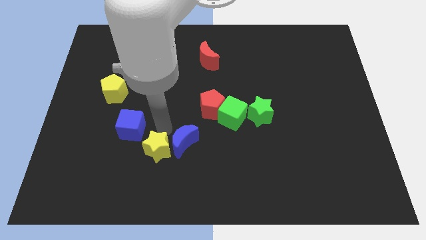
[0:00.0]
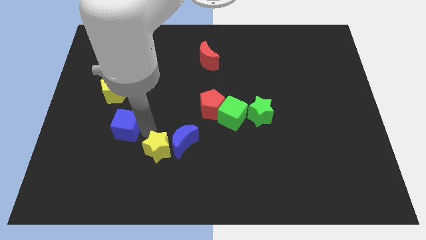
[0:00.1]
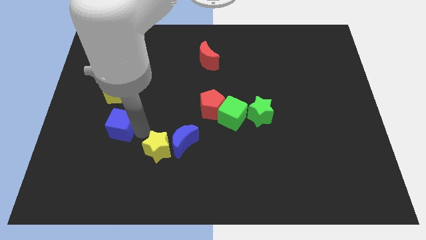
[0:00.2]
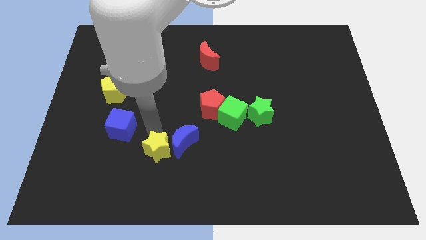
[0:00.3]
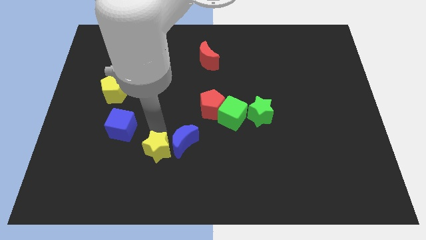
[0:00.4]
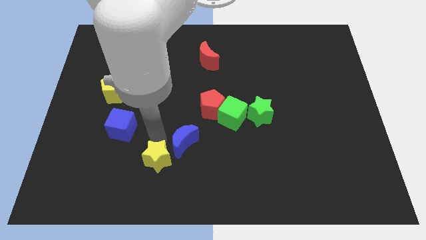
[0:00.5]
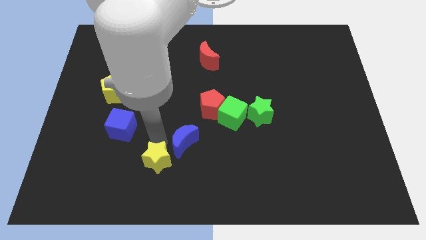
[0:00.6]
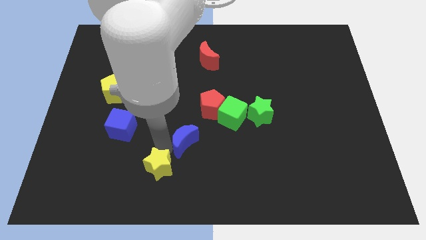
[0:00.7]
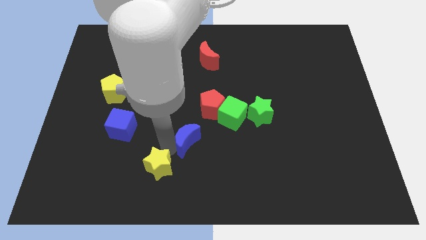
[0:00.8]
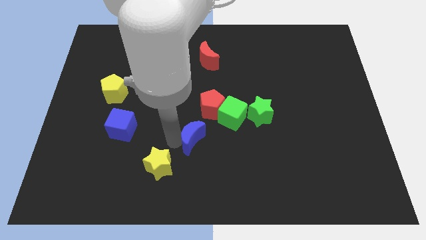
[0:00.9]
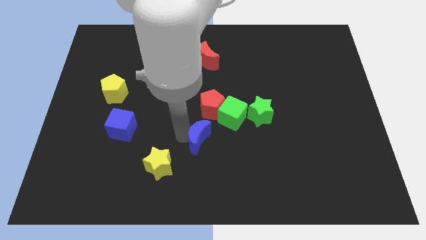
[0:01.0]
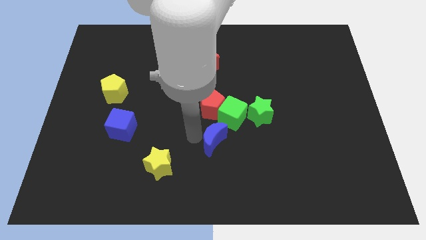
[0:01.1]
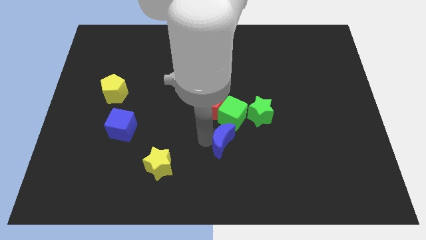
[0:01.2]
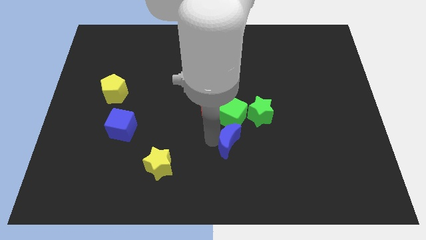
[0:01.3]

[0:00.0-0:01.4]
move the yellow star away from the blue moon

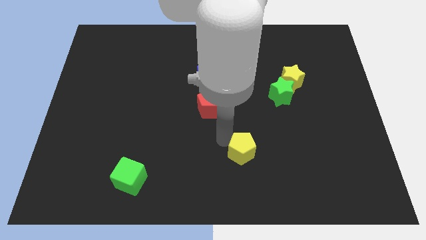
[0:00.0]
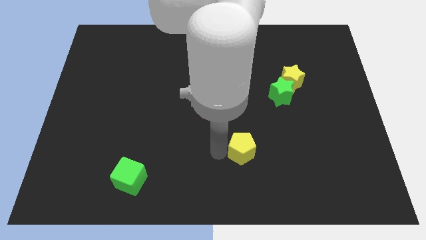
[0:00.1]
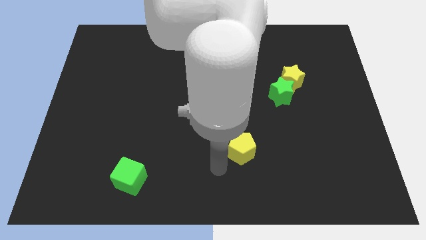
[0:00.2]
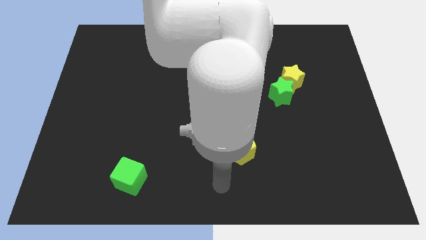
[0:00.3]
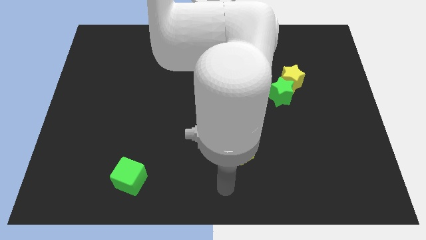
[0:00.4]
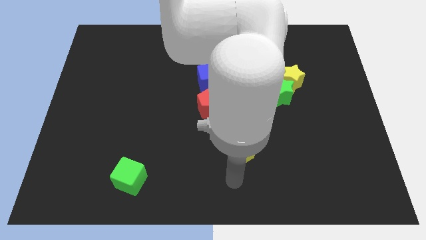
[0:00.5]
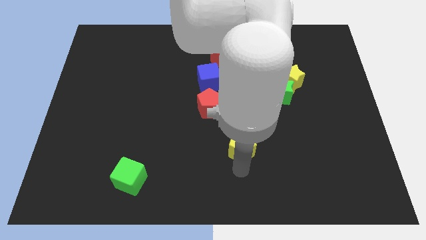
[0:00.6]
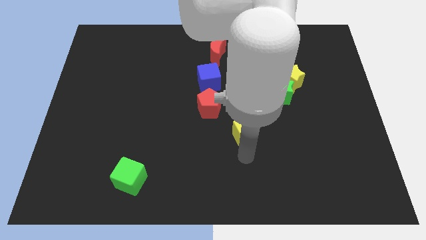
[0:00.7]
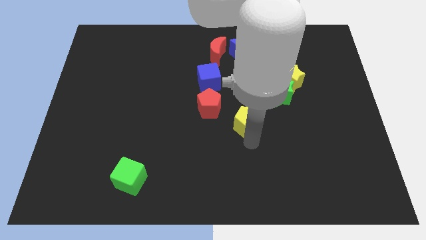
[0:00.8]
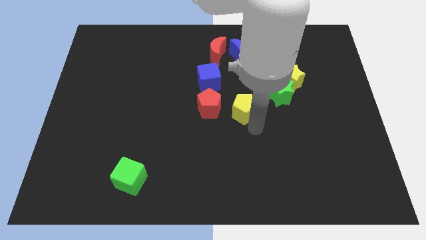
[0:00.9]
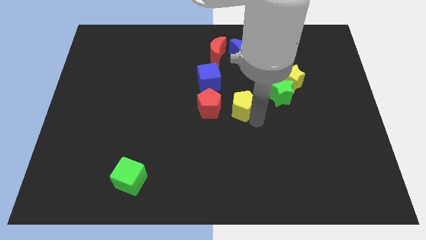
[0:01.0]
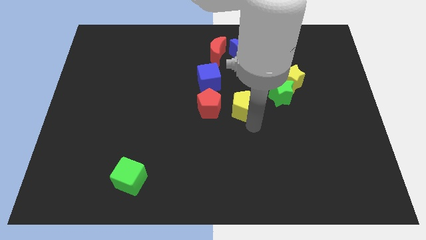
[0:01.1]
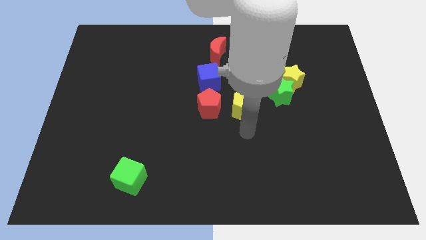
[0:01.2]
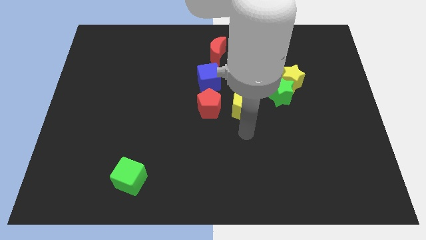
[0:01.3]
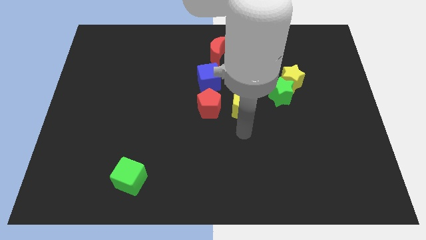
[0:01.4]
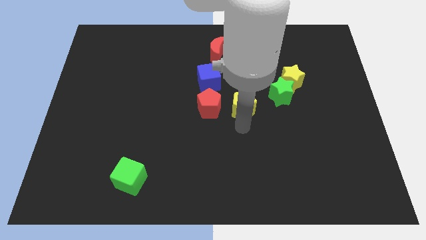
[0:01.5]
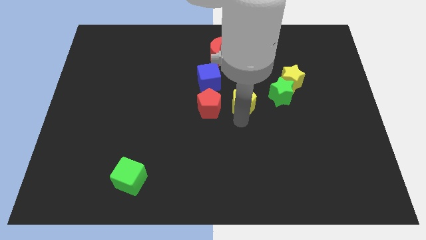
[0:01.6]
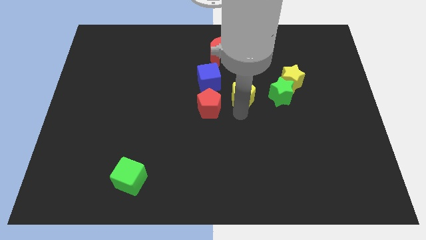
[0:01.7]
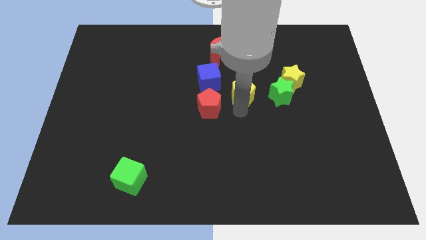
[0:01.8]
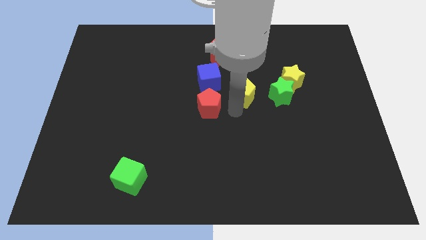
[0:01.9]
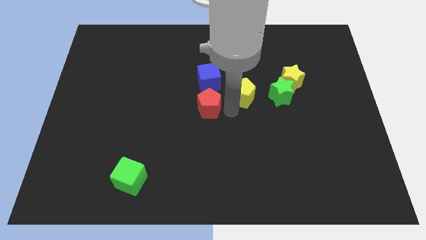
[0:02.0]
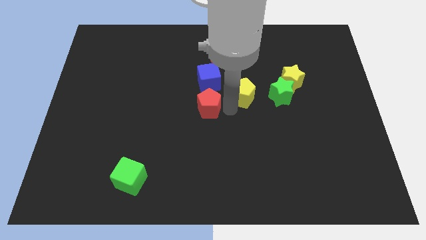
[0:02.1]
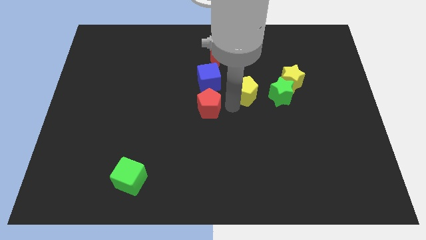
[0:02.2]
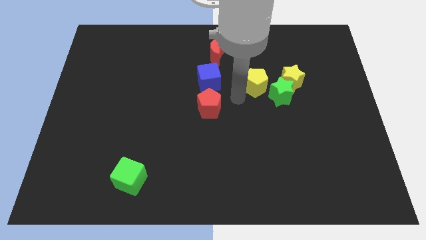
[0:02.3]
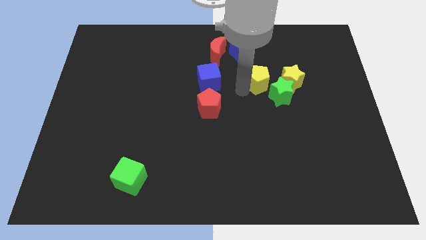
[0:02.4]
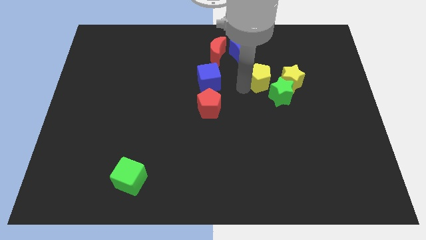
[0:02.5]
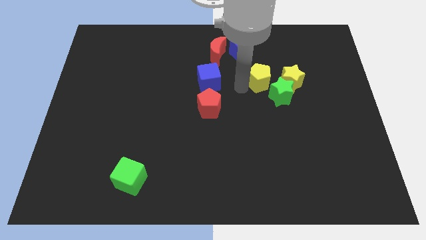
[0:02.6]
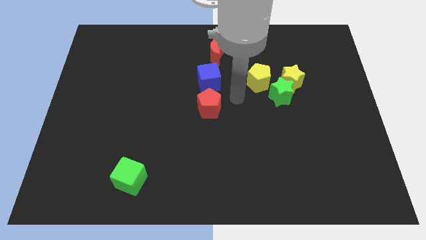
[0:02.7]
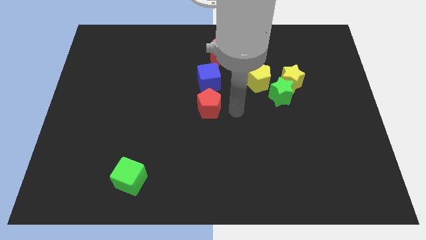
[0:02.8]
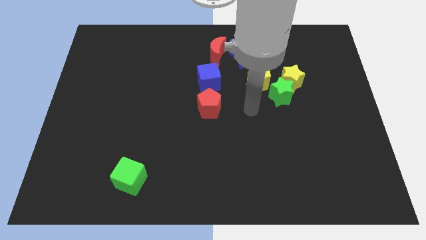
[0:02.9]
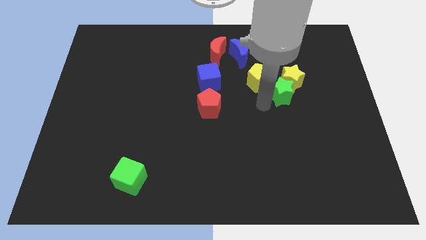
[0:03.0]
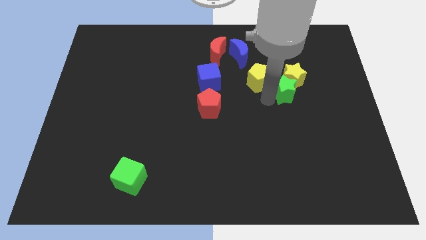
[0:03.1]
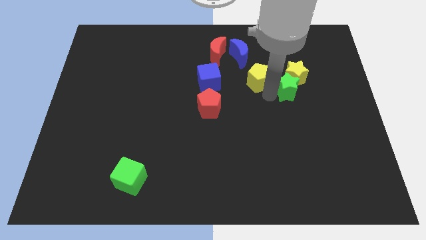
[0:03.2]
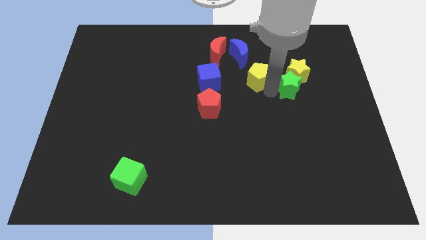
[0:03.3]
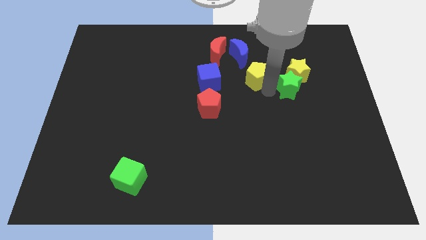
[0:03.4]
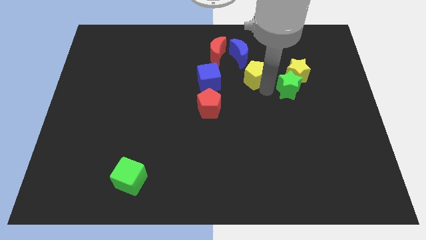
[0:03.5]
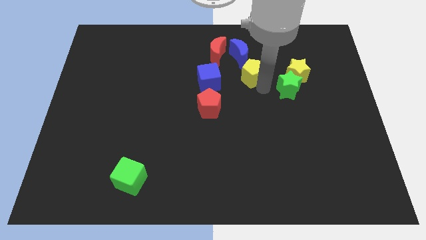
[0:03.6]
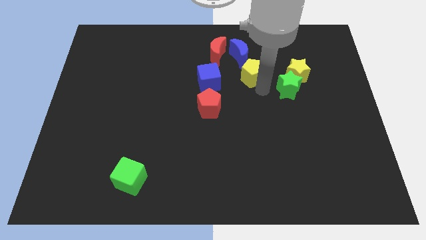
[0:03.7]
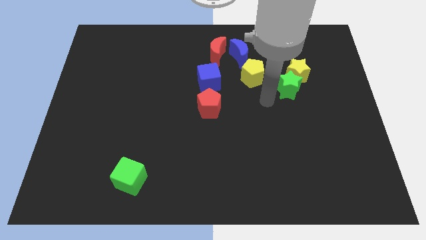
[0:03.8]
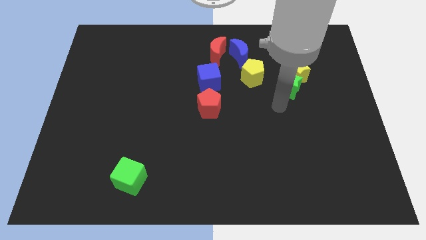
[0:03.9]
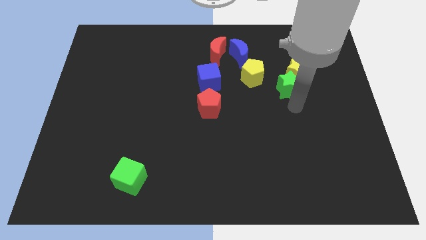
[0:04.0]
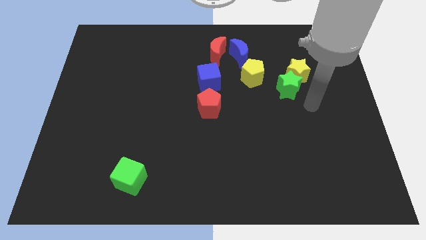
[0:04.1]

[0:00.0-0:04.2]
place the yellow pentagon to the right of the blue cube

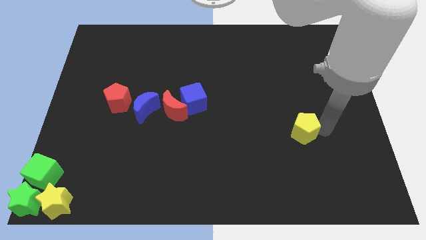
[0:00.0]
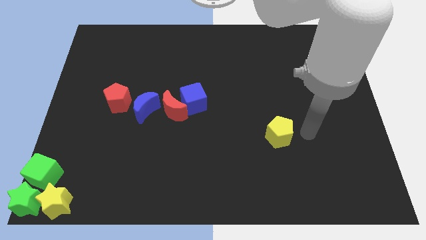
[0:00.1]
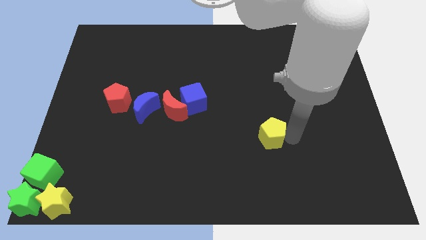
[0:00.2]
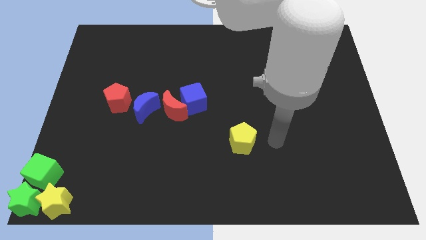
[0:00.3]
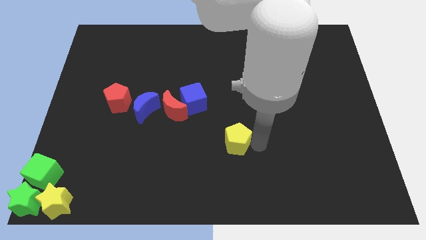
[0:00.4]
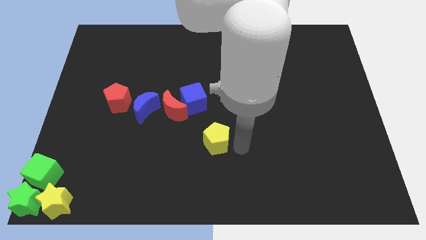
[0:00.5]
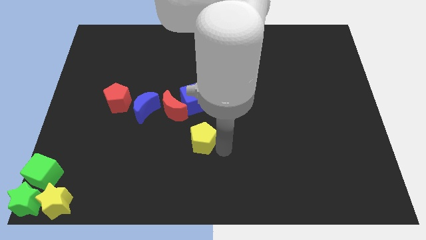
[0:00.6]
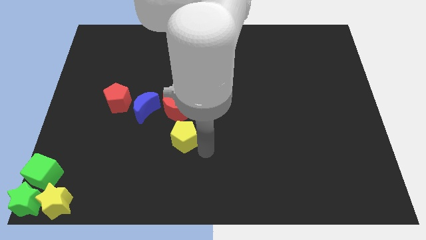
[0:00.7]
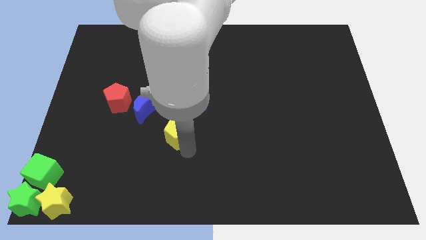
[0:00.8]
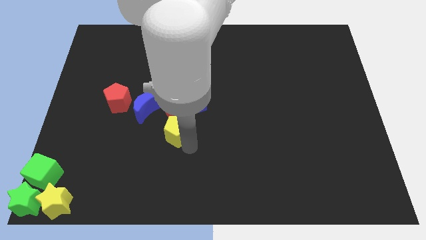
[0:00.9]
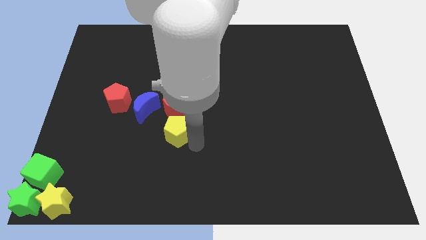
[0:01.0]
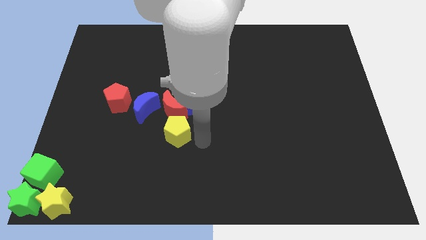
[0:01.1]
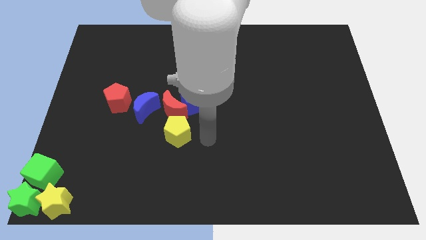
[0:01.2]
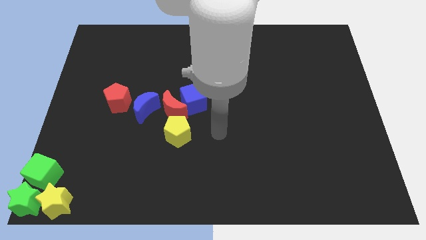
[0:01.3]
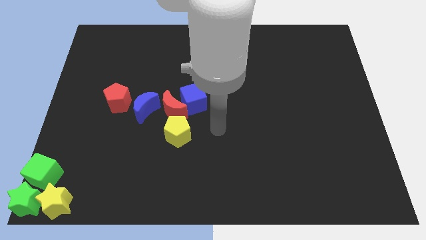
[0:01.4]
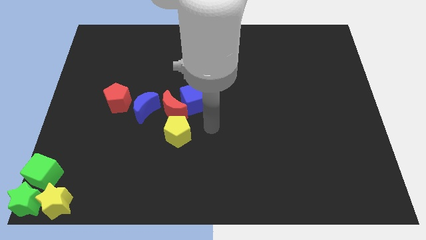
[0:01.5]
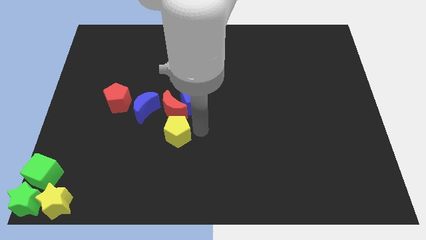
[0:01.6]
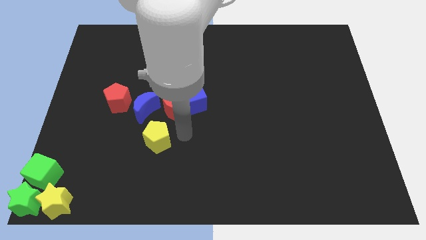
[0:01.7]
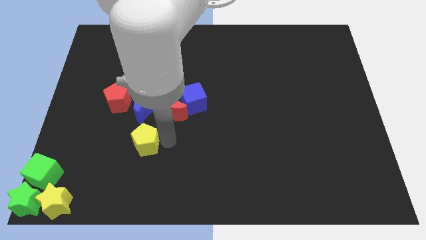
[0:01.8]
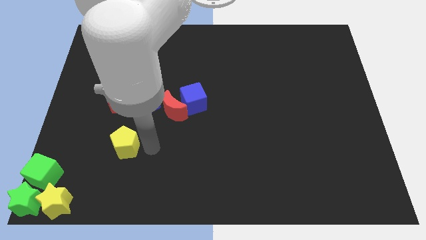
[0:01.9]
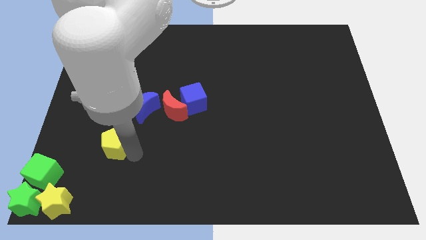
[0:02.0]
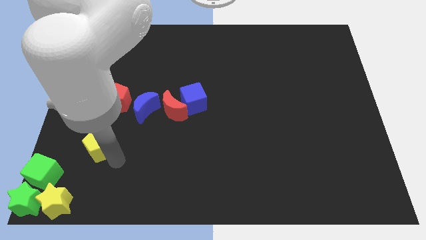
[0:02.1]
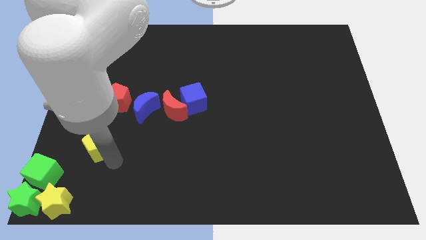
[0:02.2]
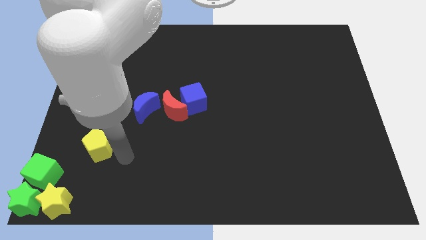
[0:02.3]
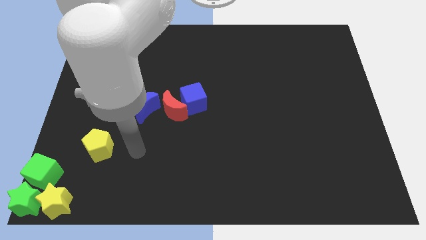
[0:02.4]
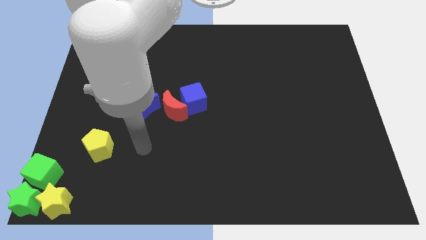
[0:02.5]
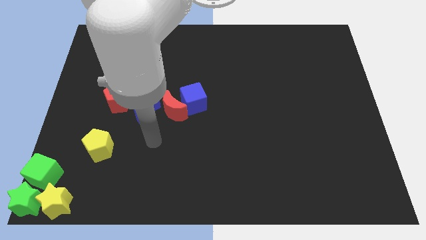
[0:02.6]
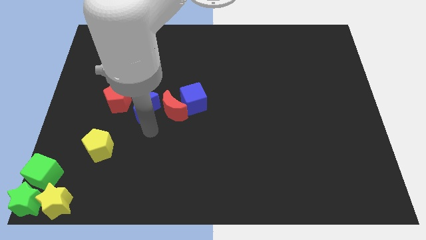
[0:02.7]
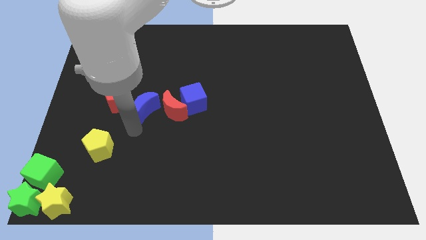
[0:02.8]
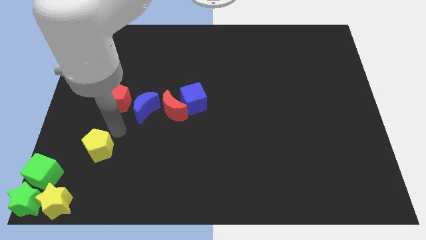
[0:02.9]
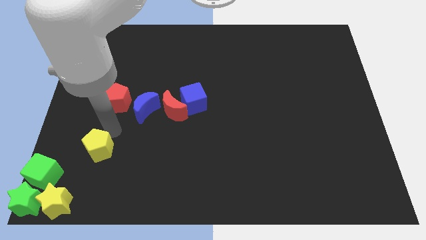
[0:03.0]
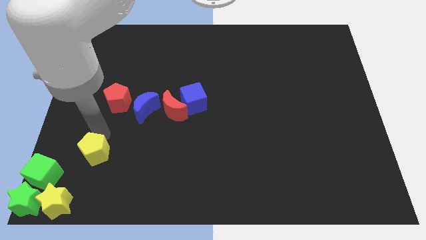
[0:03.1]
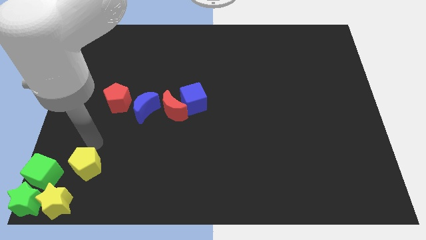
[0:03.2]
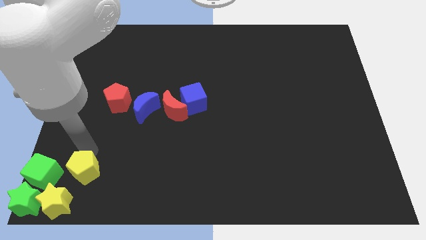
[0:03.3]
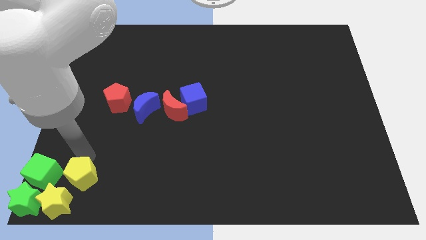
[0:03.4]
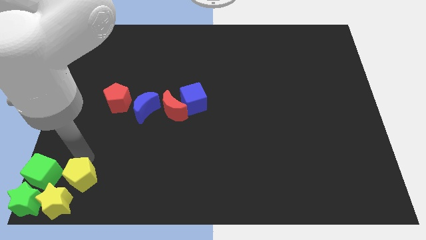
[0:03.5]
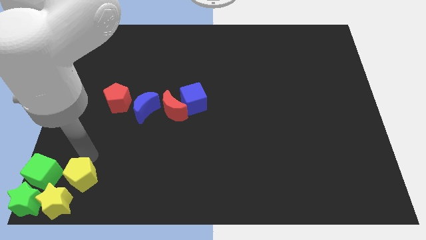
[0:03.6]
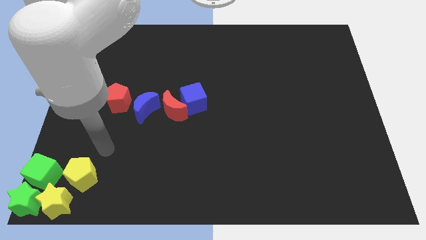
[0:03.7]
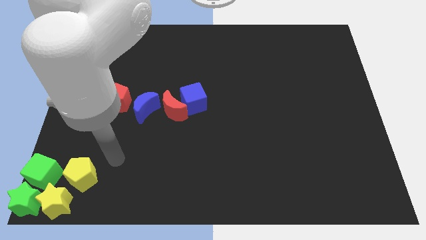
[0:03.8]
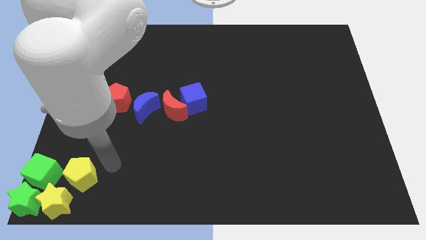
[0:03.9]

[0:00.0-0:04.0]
push the yellow pentagon to the right of the green cube
